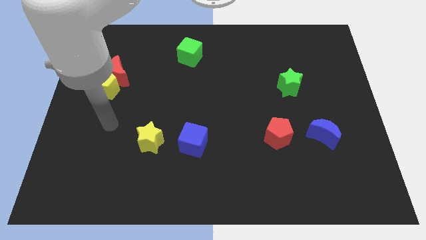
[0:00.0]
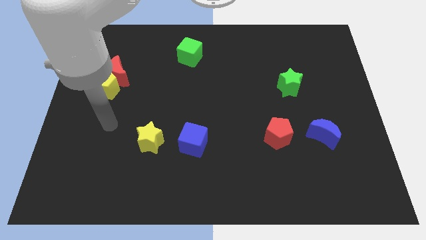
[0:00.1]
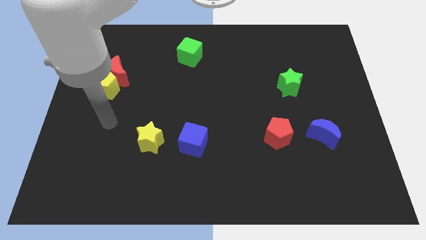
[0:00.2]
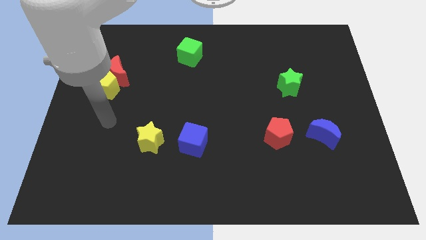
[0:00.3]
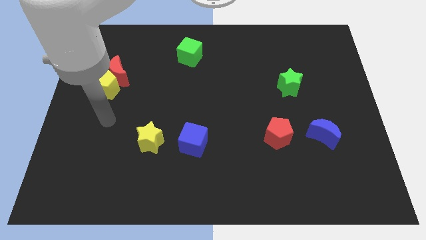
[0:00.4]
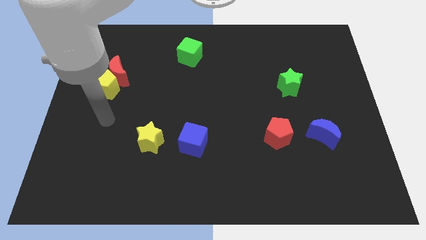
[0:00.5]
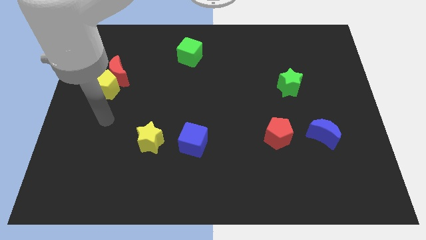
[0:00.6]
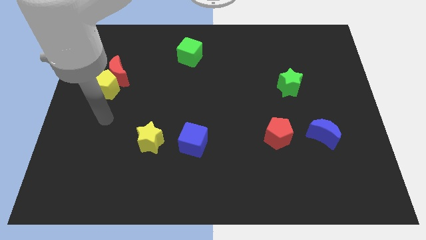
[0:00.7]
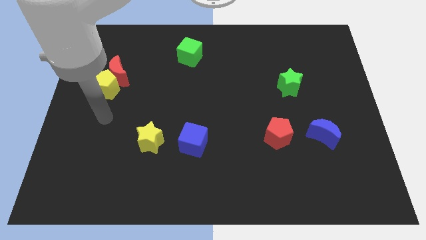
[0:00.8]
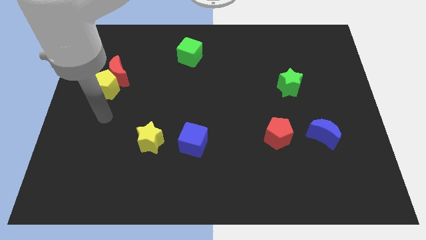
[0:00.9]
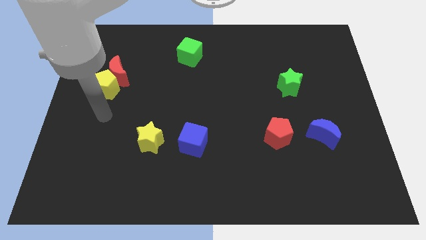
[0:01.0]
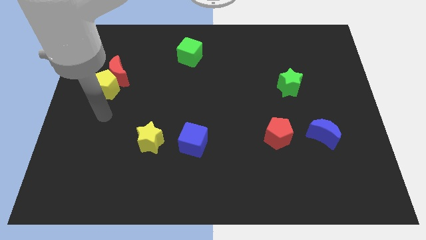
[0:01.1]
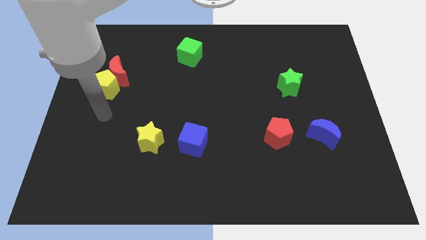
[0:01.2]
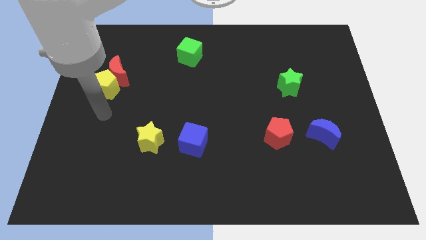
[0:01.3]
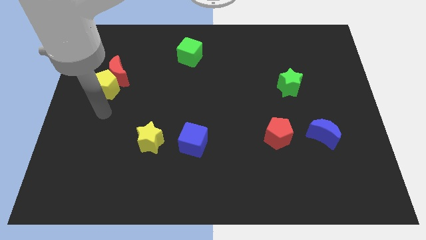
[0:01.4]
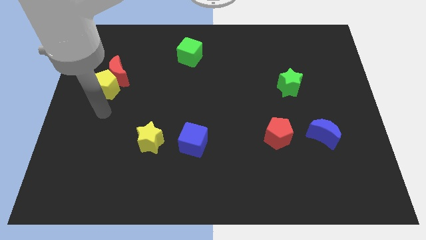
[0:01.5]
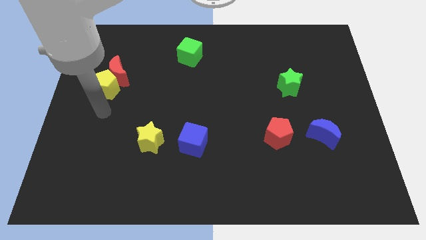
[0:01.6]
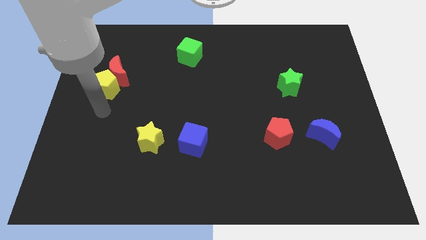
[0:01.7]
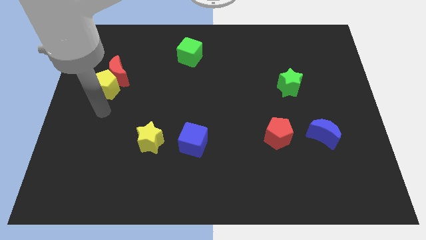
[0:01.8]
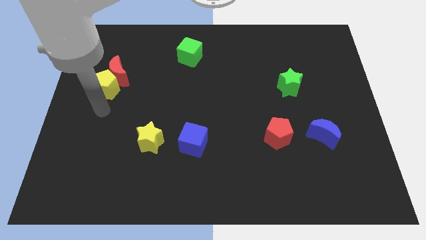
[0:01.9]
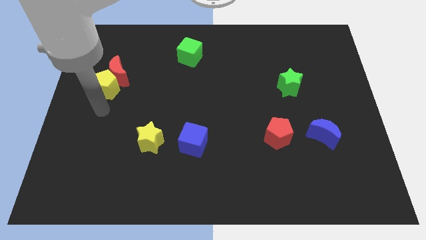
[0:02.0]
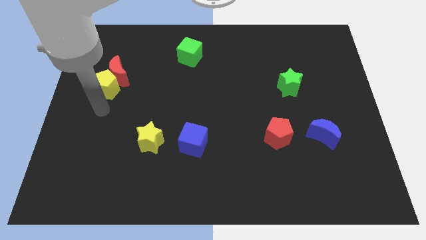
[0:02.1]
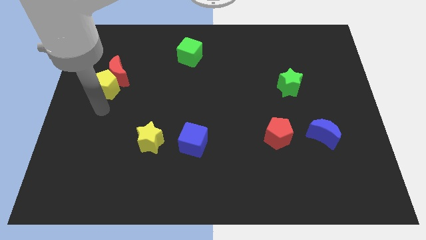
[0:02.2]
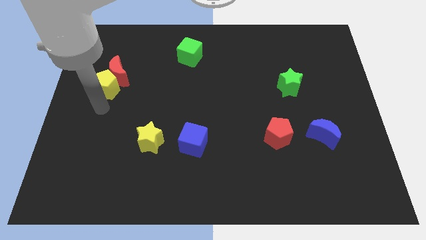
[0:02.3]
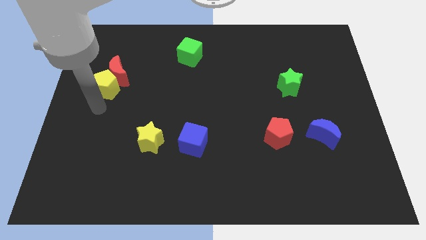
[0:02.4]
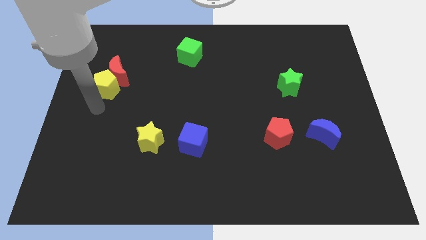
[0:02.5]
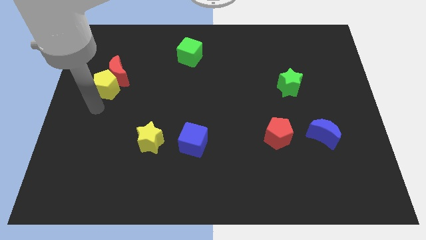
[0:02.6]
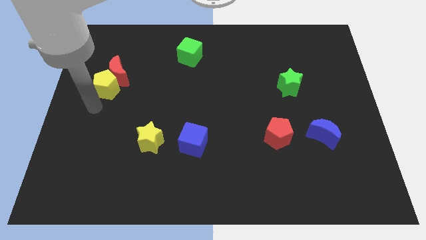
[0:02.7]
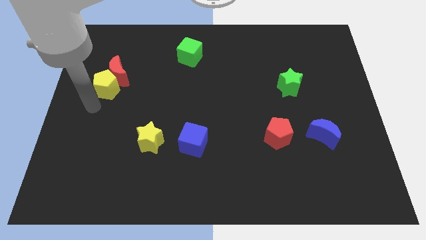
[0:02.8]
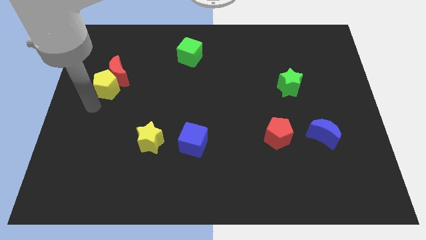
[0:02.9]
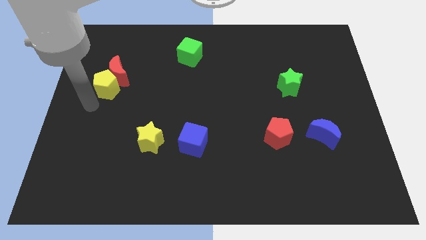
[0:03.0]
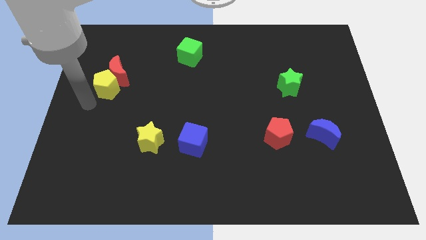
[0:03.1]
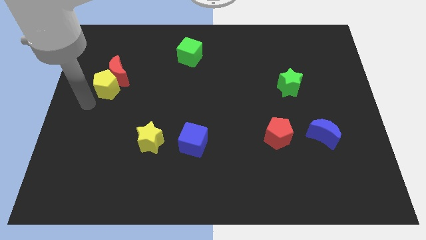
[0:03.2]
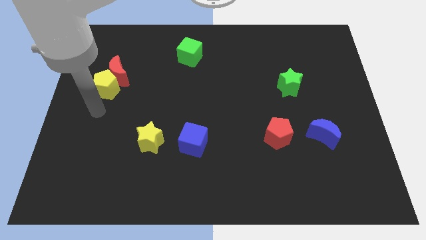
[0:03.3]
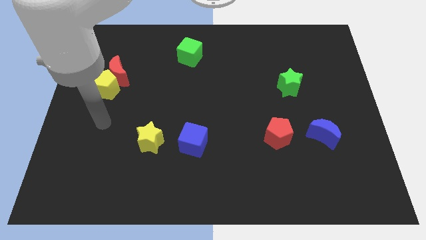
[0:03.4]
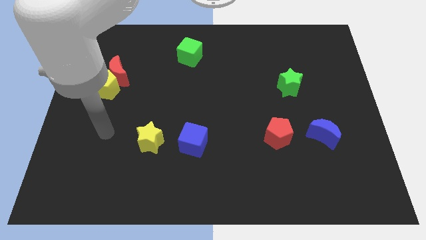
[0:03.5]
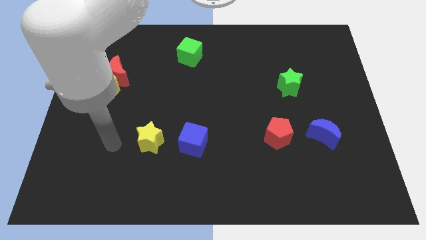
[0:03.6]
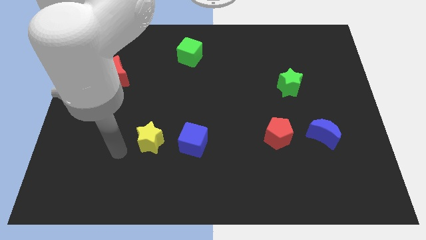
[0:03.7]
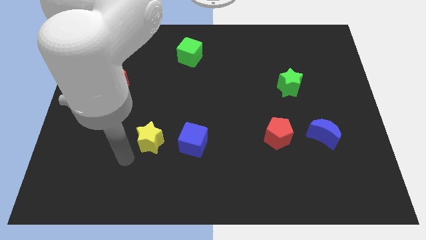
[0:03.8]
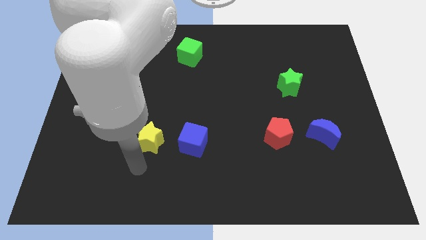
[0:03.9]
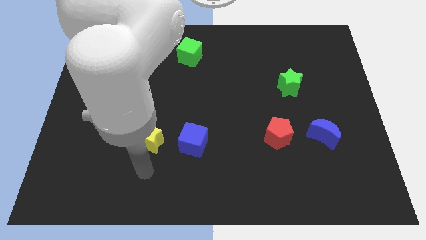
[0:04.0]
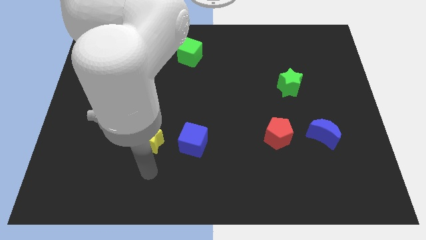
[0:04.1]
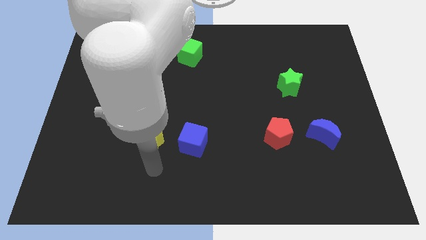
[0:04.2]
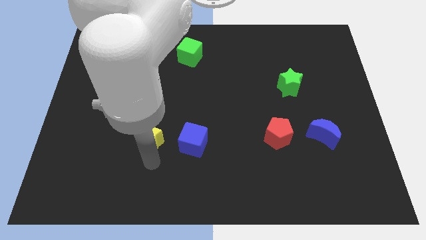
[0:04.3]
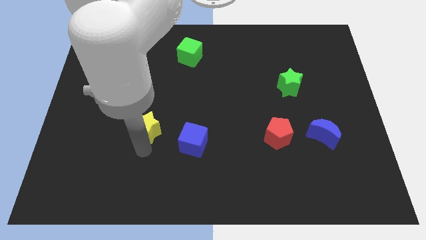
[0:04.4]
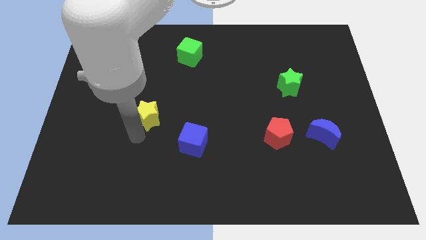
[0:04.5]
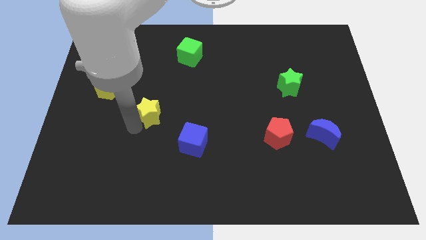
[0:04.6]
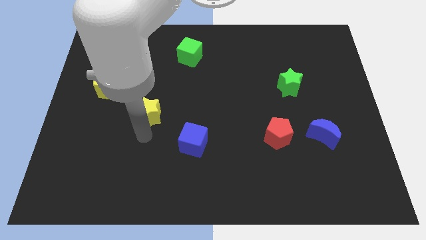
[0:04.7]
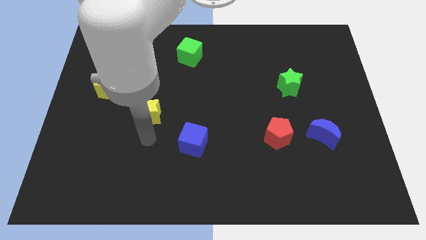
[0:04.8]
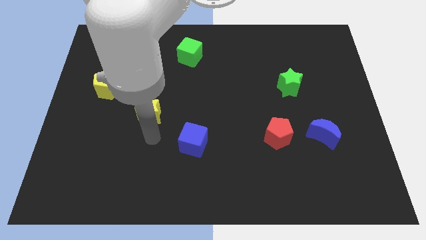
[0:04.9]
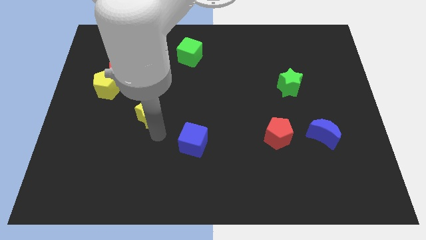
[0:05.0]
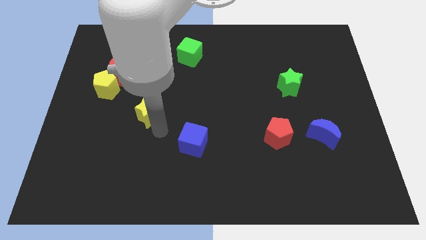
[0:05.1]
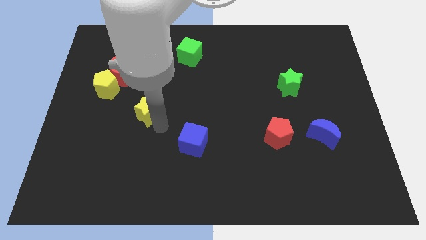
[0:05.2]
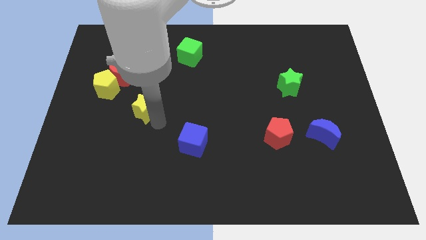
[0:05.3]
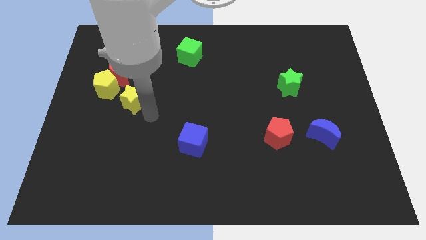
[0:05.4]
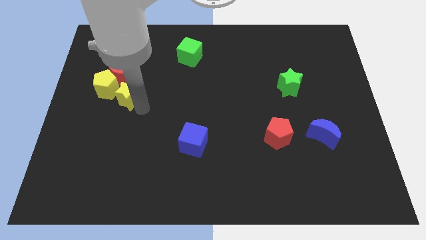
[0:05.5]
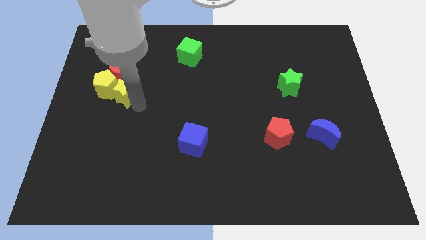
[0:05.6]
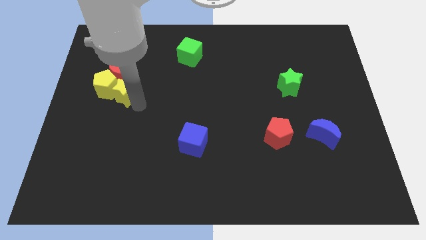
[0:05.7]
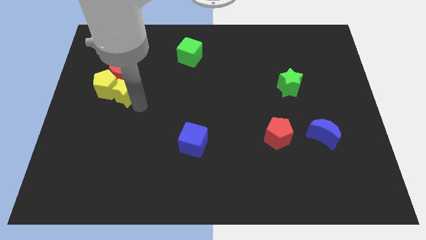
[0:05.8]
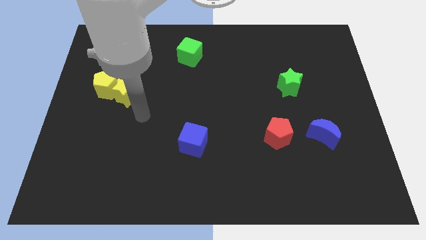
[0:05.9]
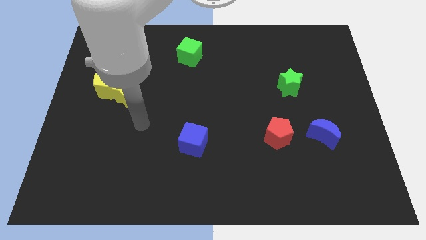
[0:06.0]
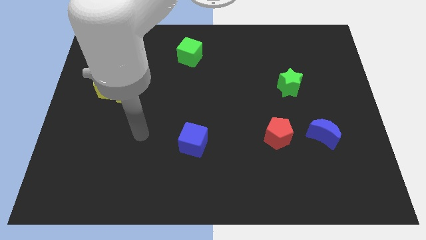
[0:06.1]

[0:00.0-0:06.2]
push the yellow star to the bottom right of the yellow pentagon

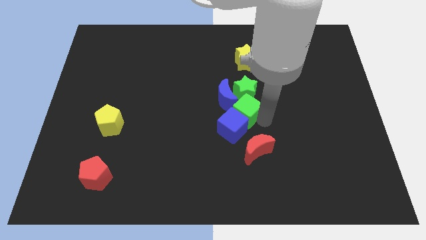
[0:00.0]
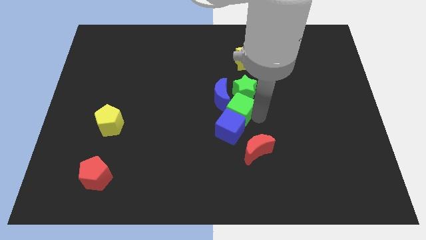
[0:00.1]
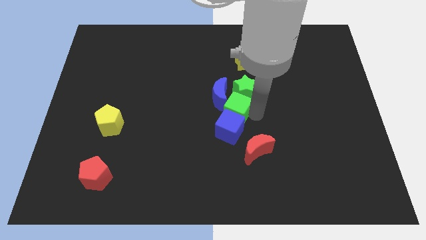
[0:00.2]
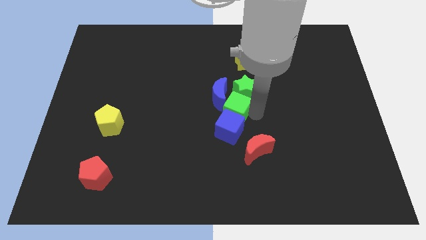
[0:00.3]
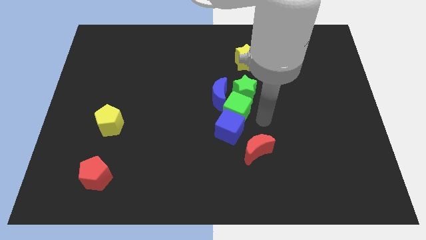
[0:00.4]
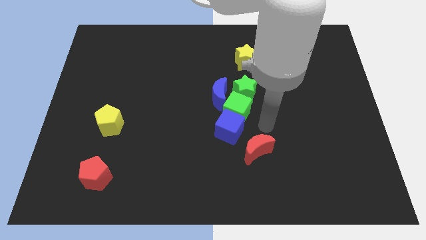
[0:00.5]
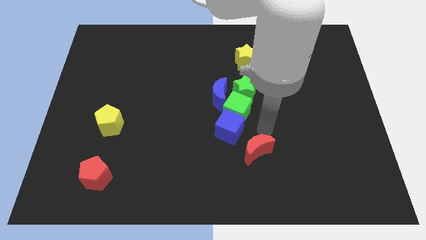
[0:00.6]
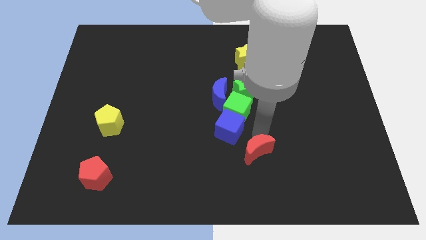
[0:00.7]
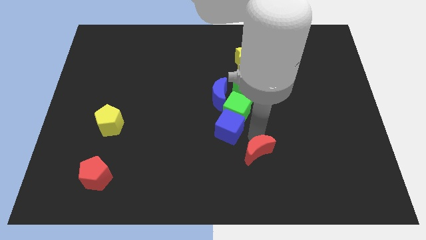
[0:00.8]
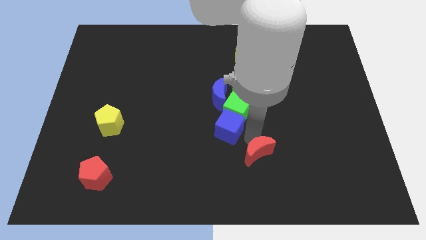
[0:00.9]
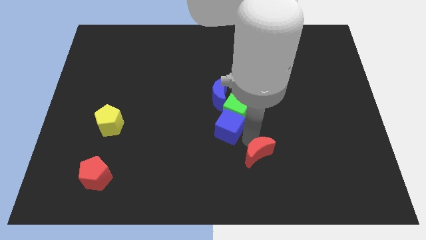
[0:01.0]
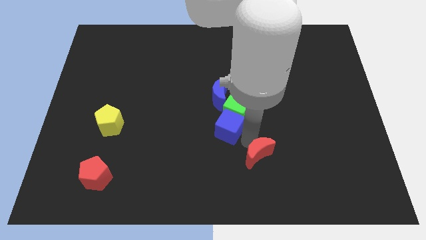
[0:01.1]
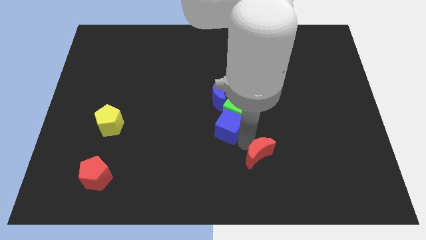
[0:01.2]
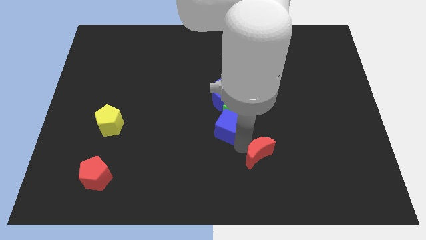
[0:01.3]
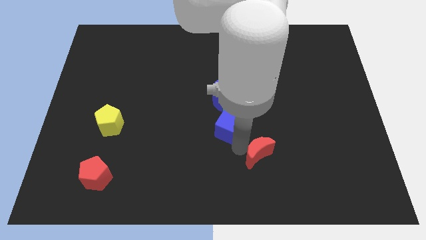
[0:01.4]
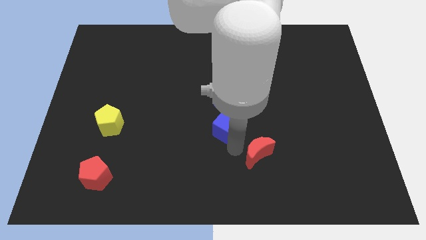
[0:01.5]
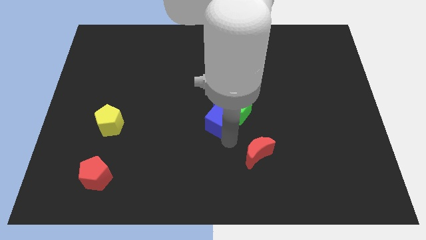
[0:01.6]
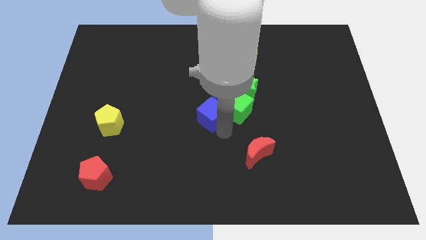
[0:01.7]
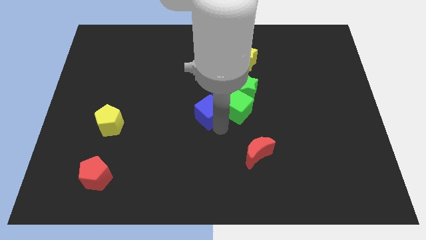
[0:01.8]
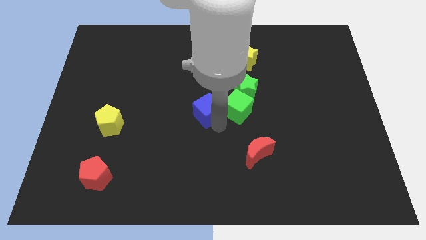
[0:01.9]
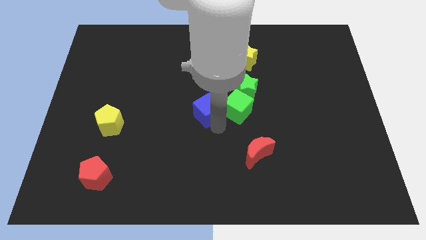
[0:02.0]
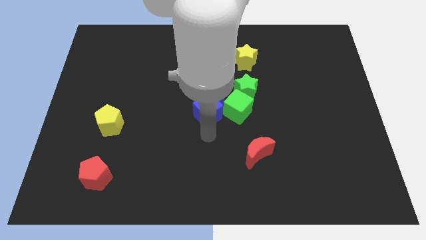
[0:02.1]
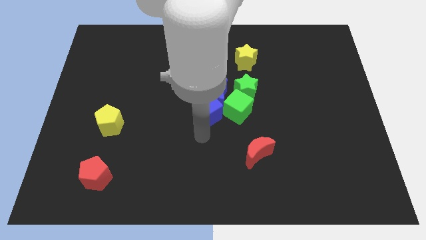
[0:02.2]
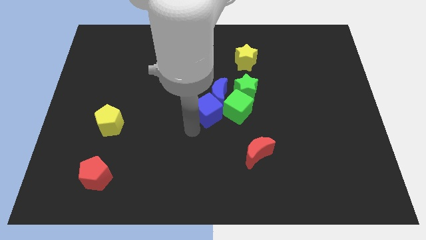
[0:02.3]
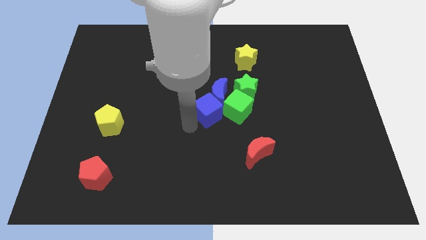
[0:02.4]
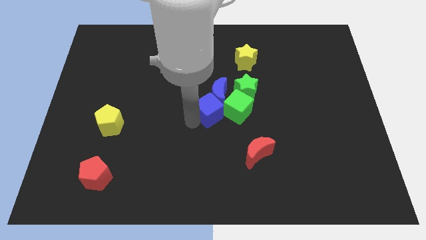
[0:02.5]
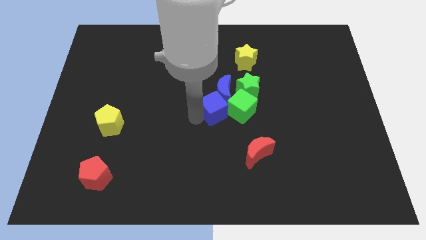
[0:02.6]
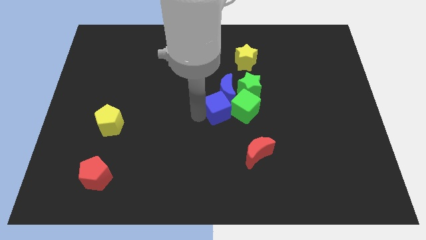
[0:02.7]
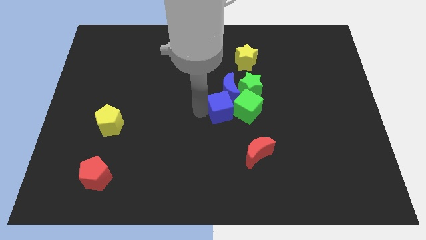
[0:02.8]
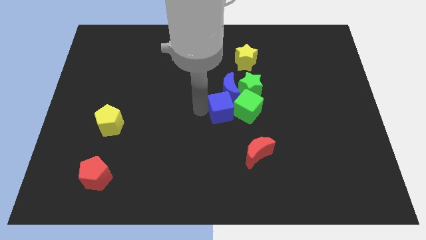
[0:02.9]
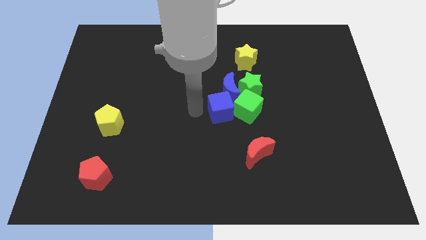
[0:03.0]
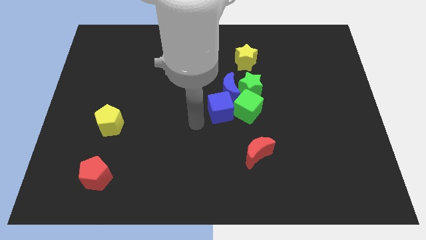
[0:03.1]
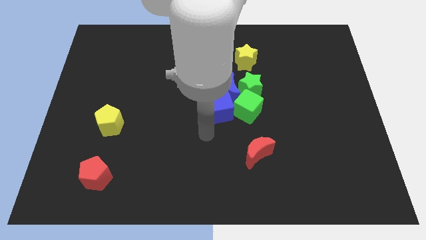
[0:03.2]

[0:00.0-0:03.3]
place the blue cube left to the green cube
